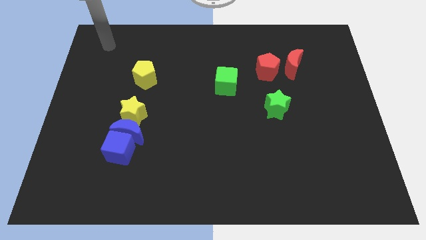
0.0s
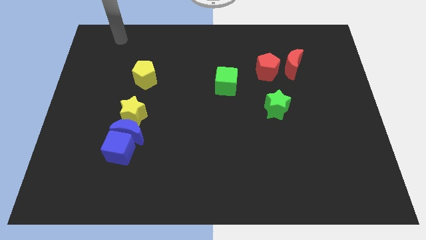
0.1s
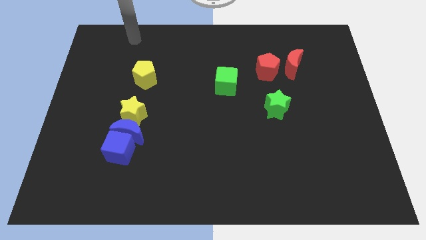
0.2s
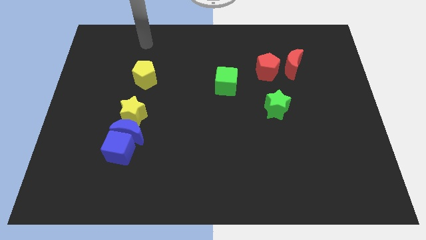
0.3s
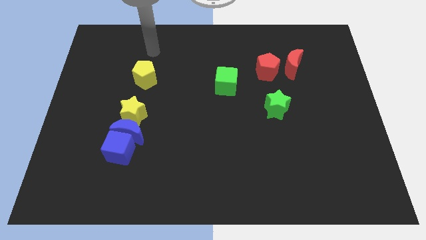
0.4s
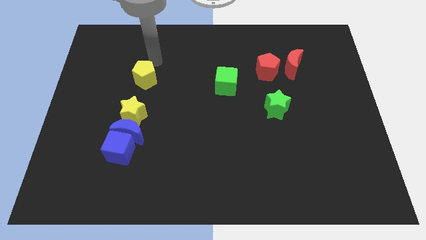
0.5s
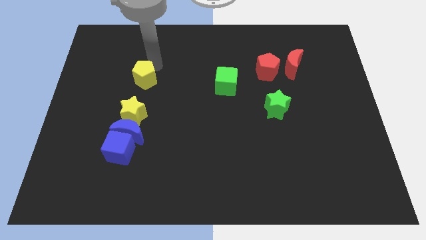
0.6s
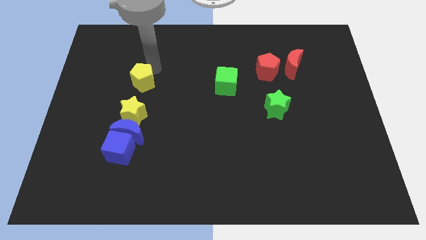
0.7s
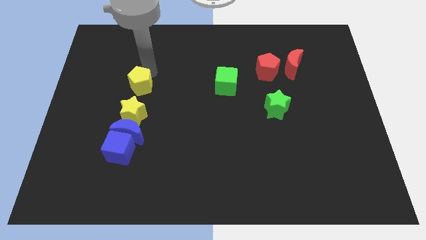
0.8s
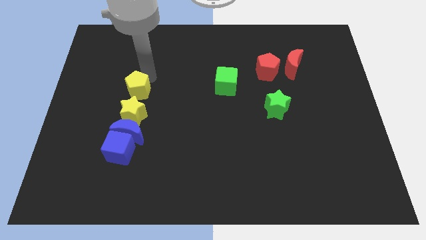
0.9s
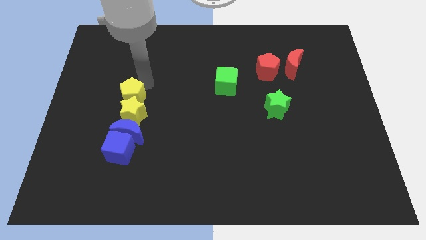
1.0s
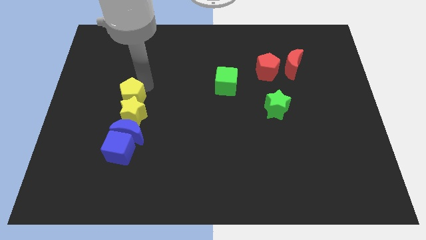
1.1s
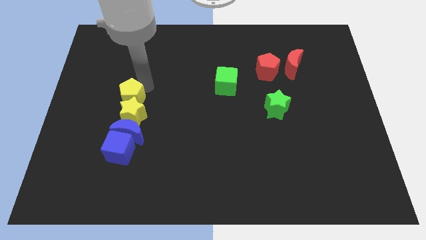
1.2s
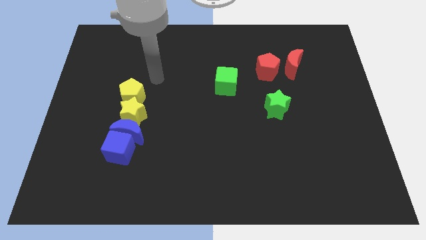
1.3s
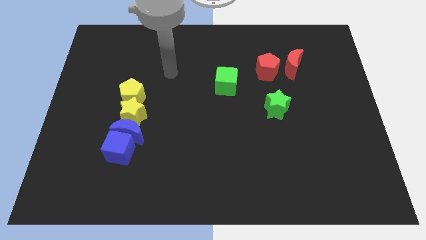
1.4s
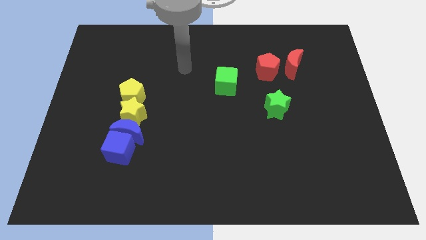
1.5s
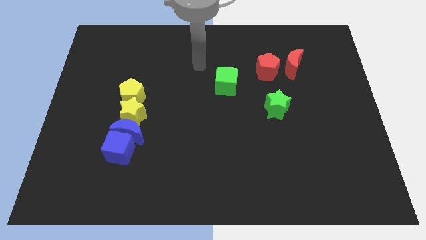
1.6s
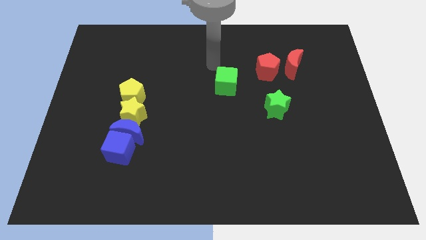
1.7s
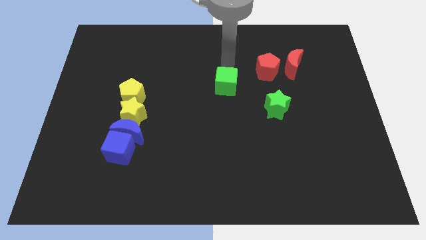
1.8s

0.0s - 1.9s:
move the yellow pentagon towards the top of the yellow star

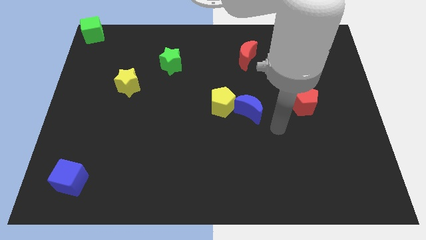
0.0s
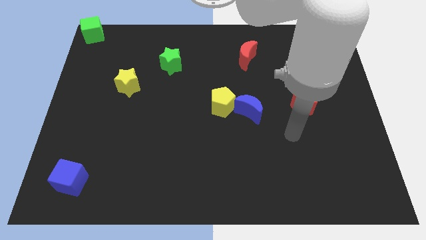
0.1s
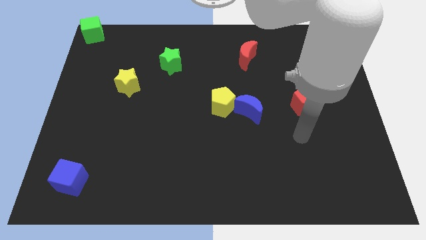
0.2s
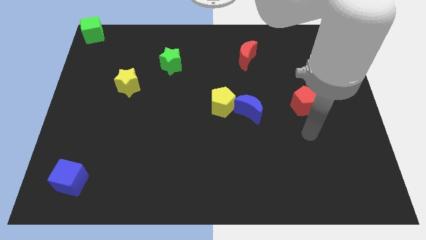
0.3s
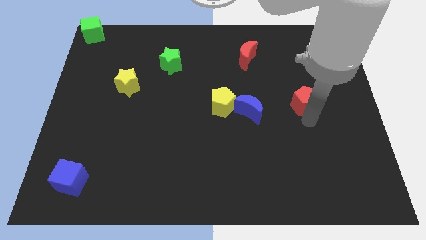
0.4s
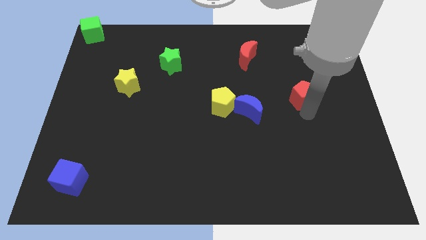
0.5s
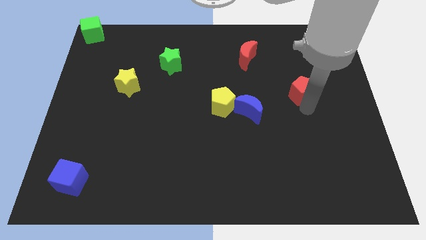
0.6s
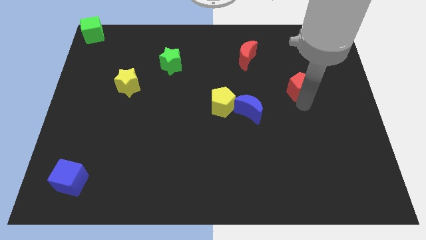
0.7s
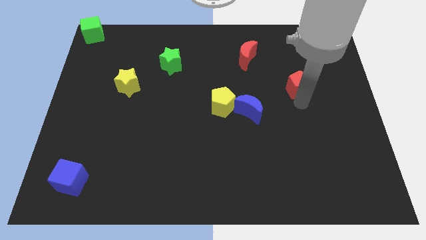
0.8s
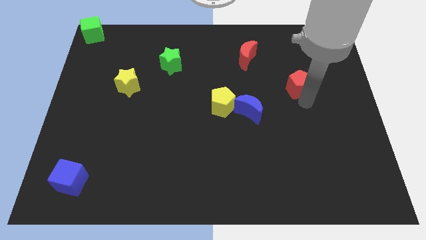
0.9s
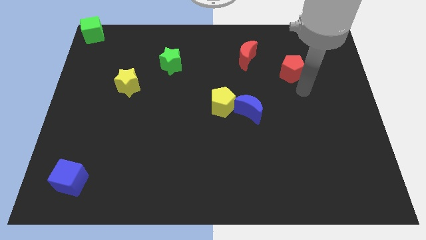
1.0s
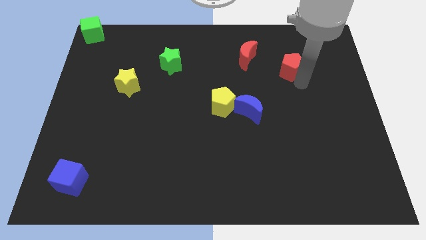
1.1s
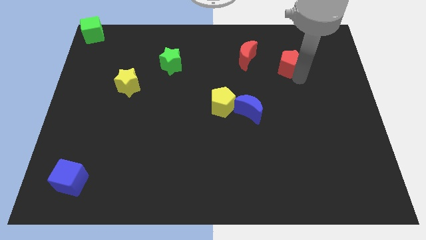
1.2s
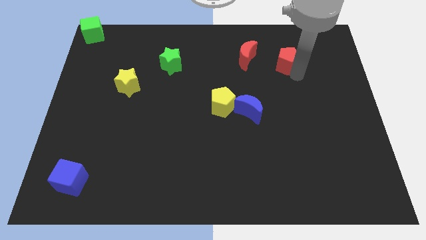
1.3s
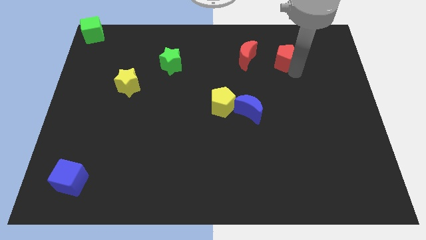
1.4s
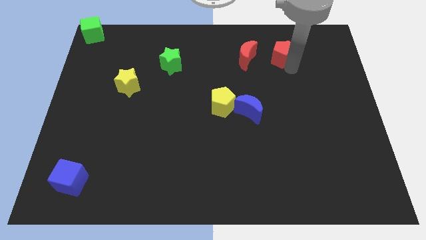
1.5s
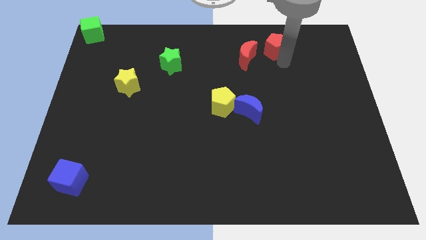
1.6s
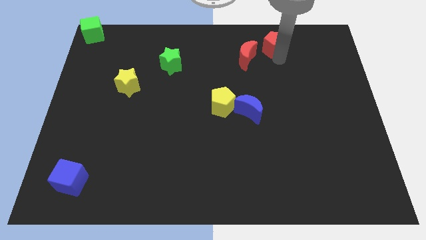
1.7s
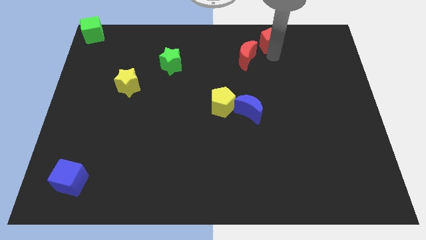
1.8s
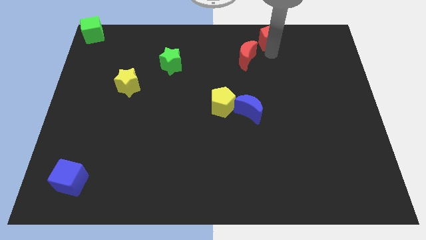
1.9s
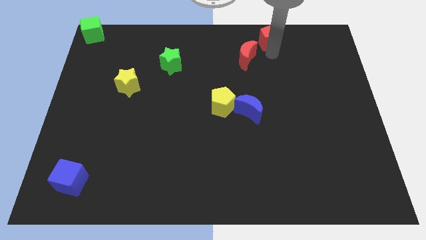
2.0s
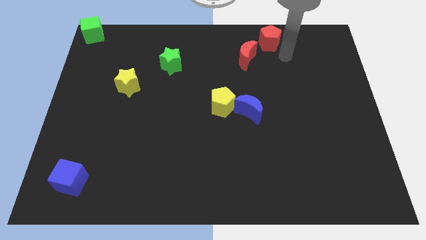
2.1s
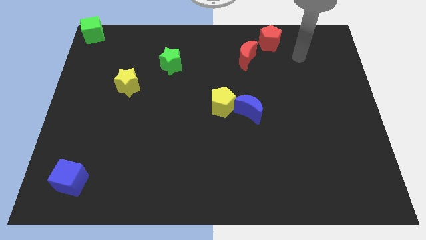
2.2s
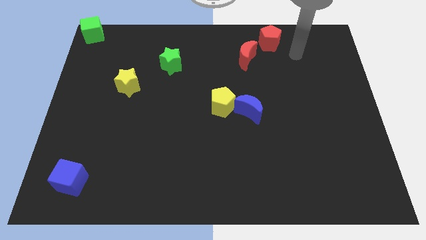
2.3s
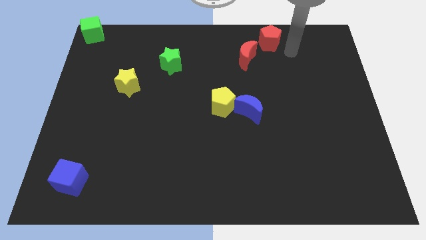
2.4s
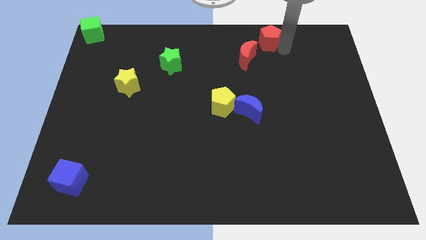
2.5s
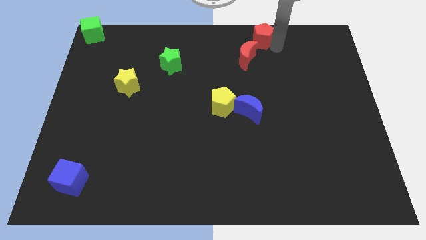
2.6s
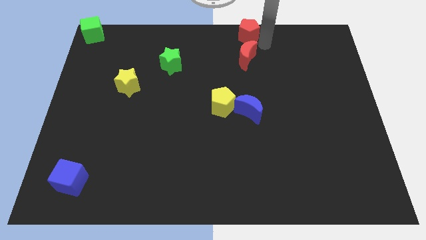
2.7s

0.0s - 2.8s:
push the red pentagon to the top right of the red crescent

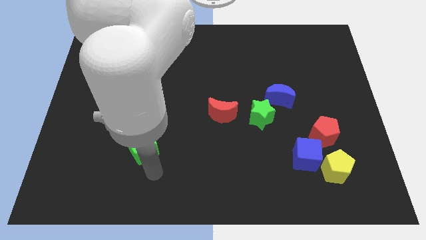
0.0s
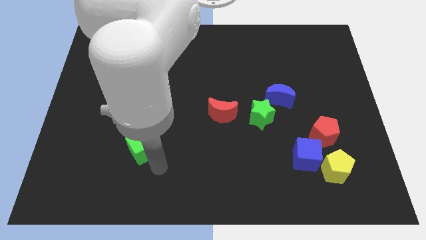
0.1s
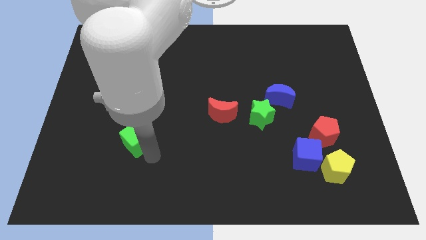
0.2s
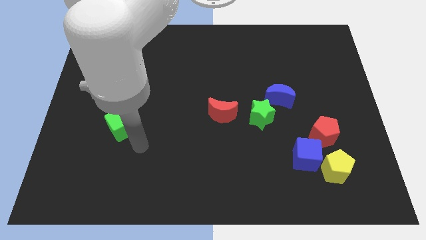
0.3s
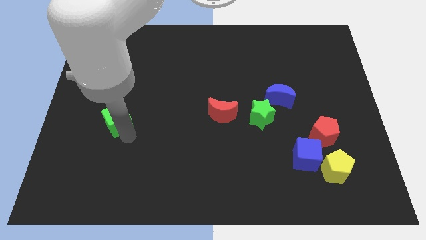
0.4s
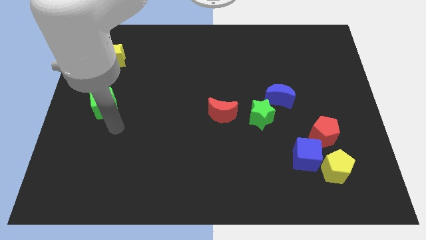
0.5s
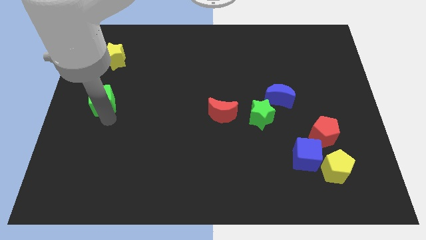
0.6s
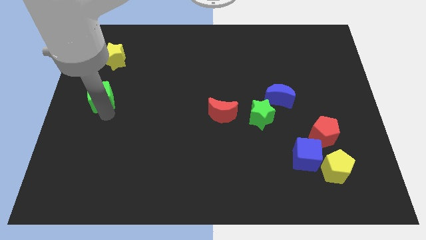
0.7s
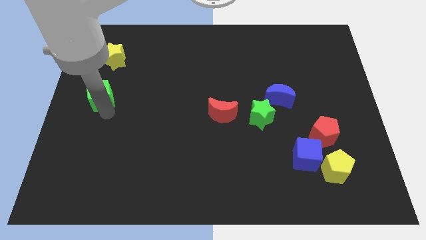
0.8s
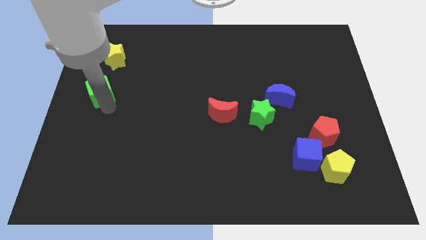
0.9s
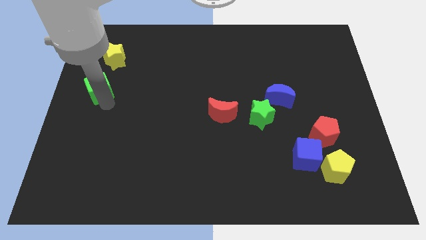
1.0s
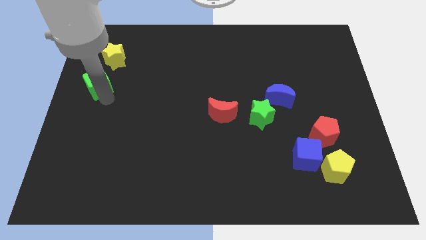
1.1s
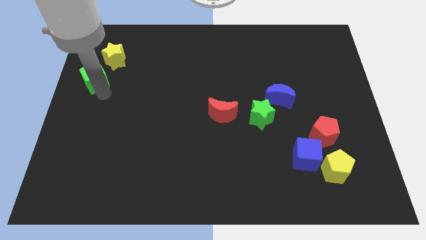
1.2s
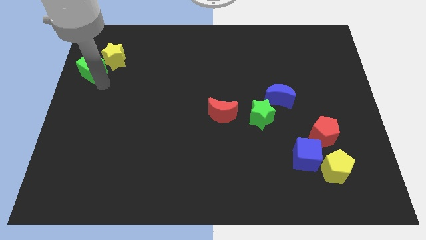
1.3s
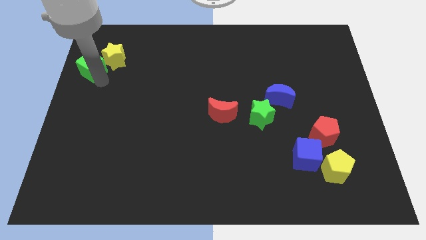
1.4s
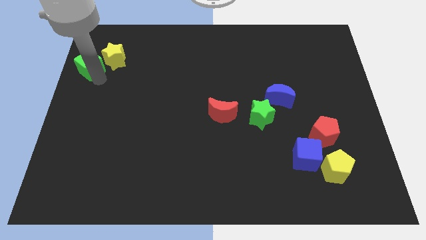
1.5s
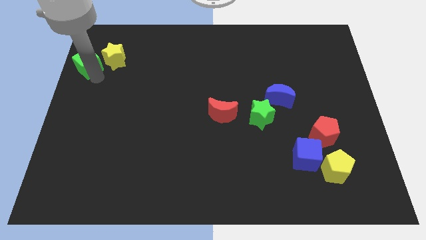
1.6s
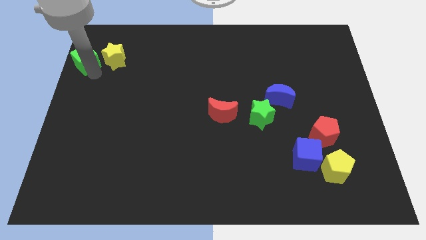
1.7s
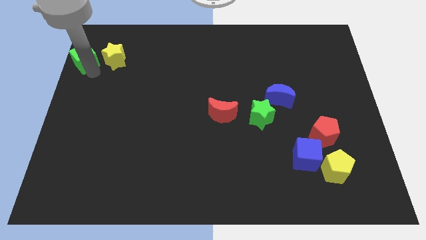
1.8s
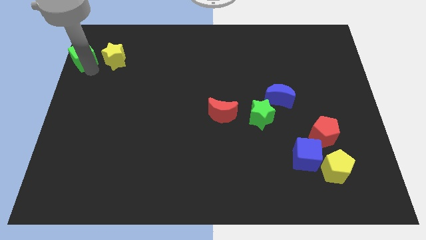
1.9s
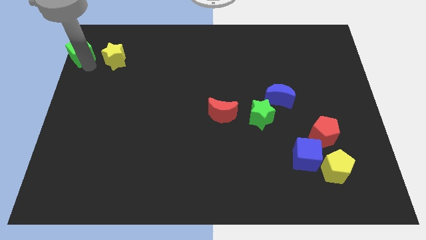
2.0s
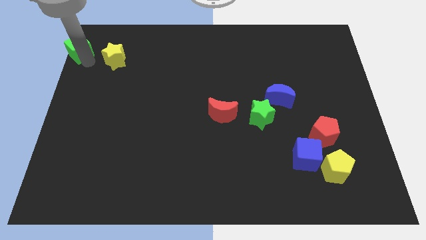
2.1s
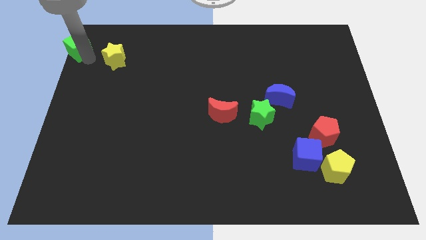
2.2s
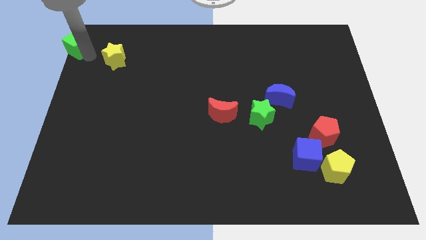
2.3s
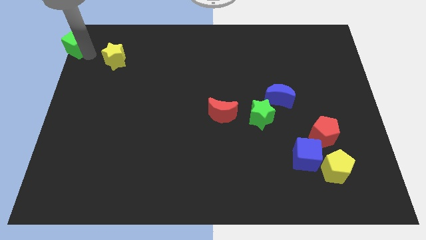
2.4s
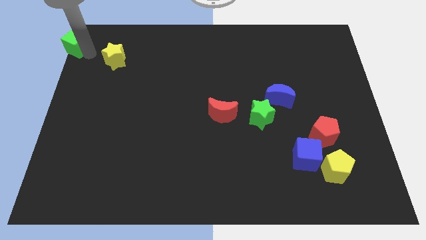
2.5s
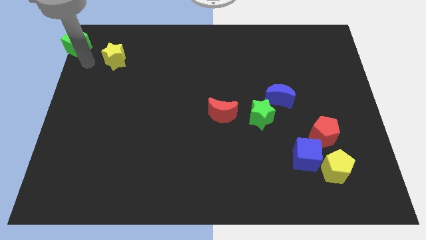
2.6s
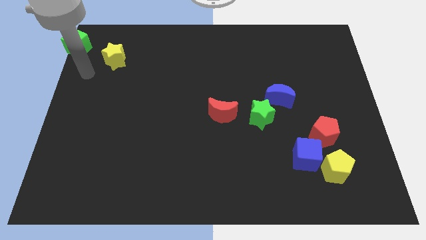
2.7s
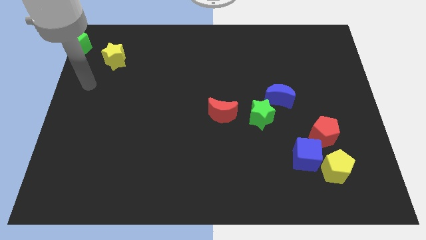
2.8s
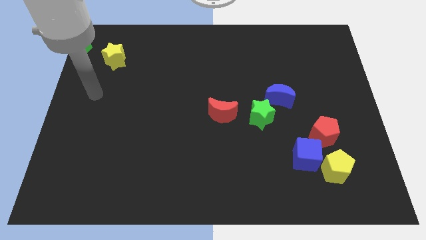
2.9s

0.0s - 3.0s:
move the green cube top left corner of the board

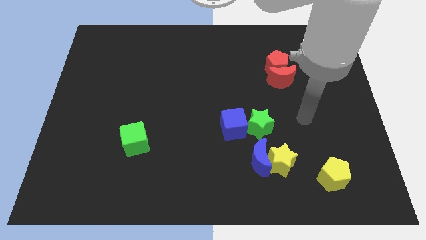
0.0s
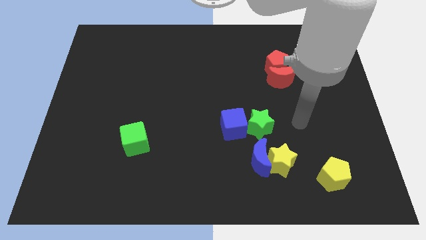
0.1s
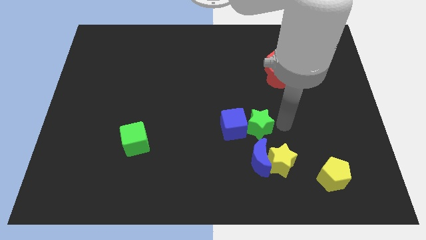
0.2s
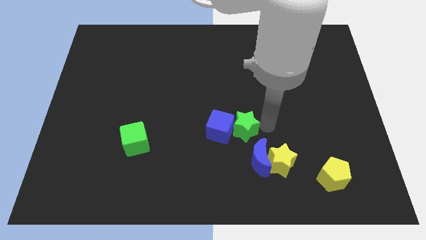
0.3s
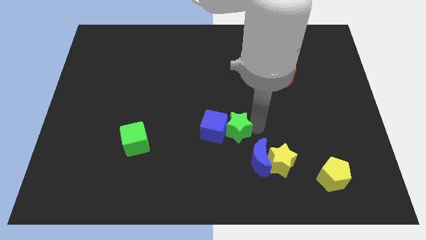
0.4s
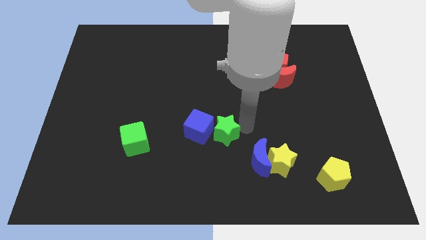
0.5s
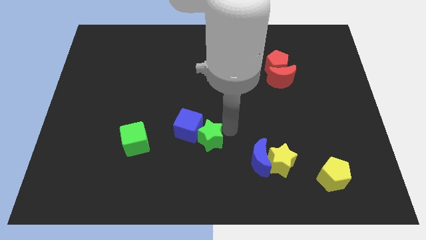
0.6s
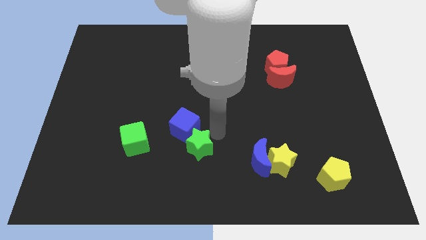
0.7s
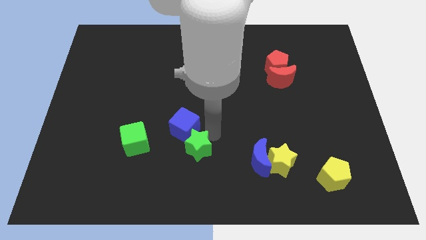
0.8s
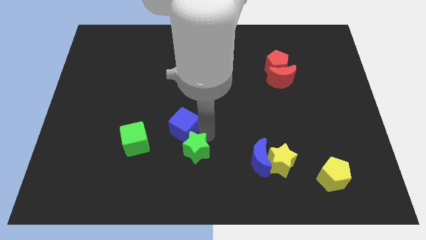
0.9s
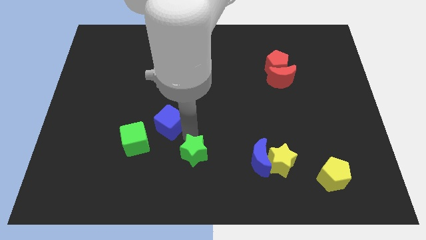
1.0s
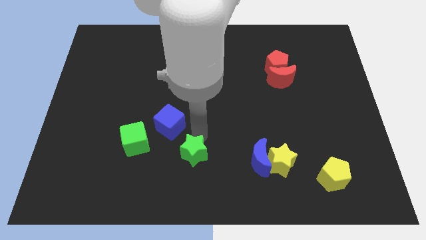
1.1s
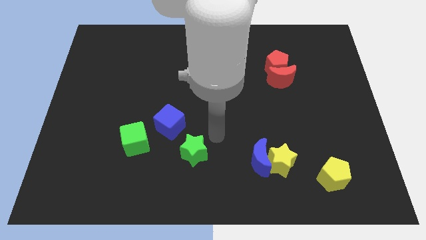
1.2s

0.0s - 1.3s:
push the green star along with the blue cube towards the green cube

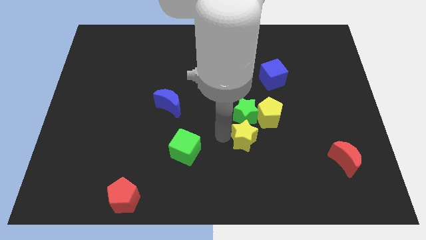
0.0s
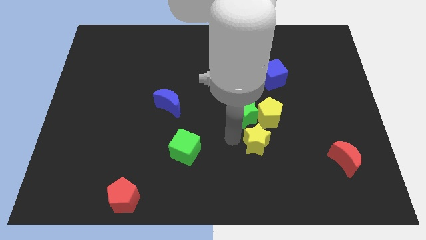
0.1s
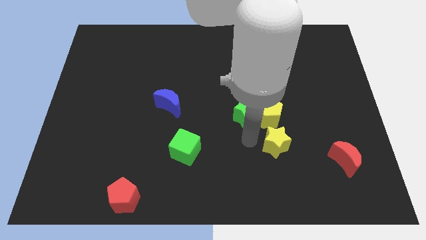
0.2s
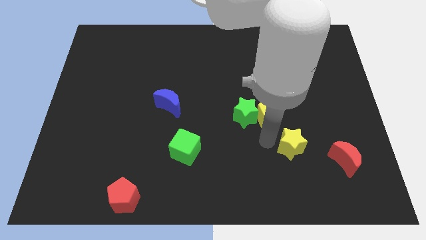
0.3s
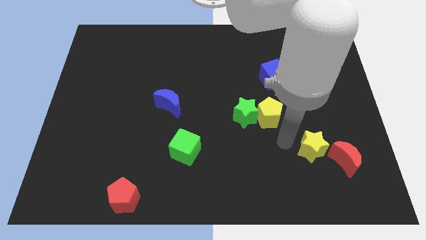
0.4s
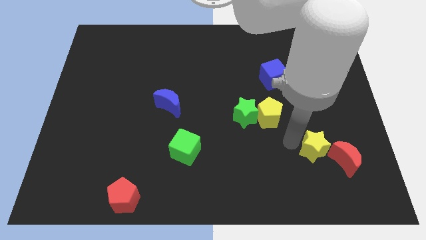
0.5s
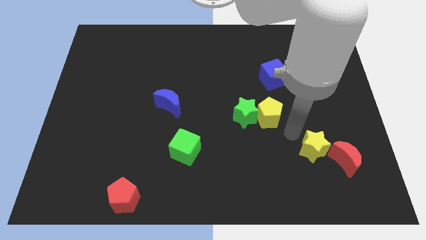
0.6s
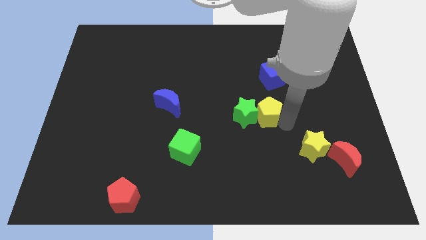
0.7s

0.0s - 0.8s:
move the yellow star diagonally left of the red crescent
